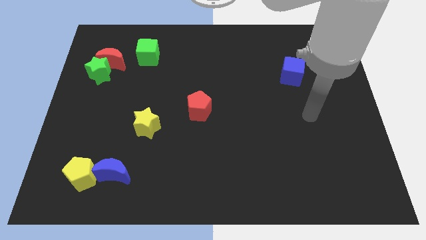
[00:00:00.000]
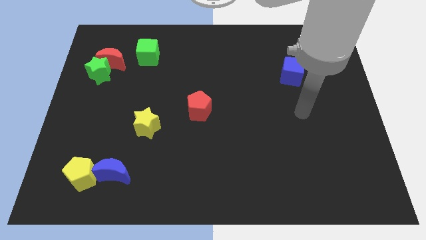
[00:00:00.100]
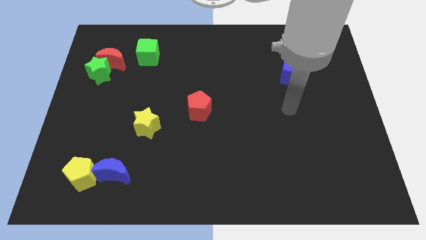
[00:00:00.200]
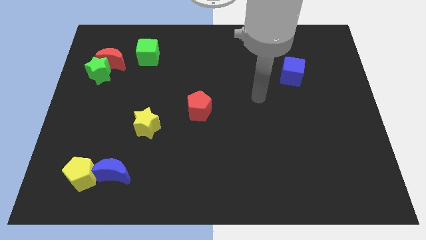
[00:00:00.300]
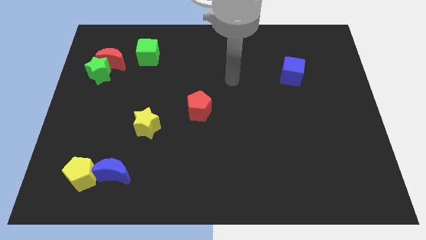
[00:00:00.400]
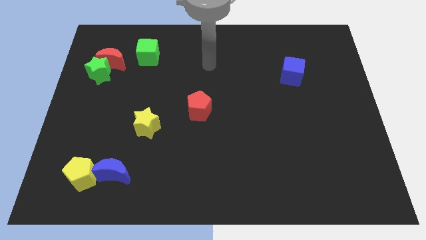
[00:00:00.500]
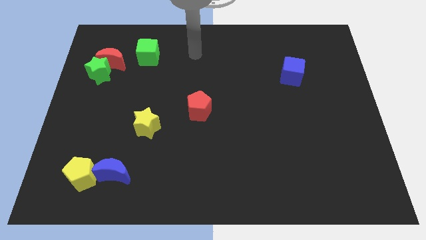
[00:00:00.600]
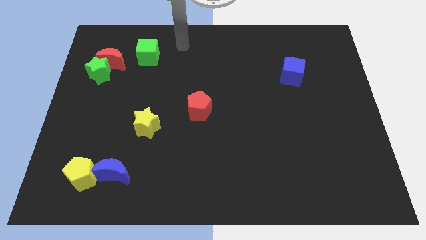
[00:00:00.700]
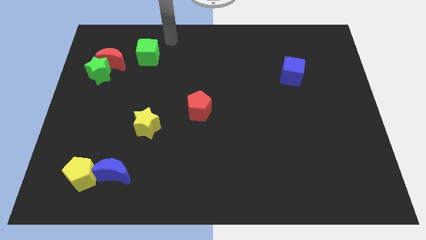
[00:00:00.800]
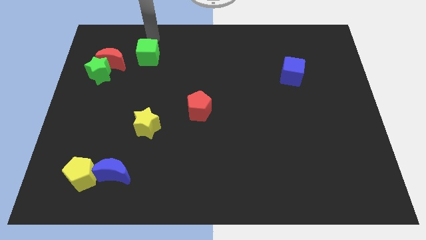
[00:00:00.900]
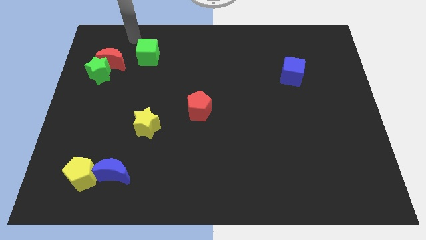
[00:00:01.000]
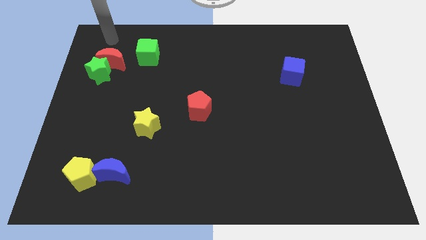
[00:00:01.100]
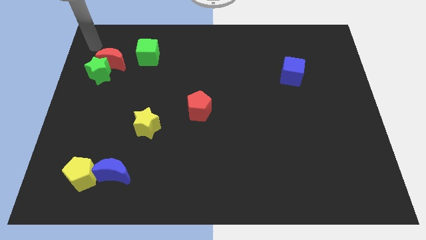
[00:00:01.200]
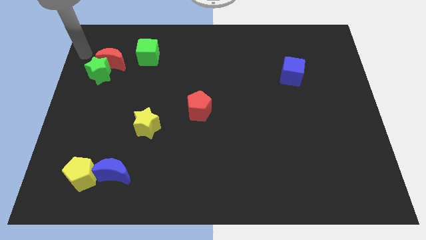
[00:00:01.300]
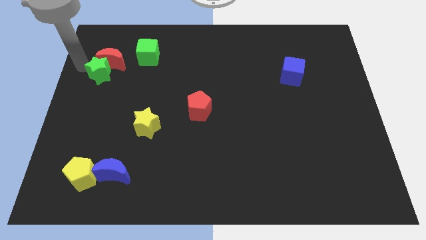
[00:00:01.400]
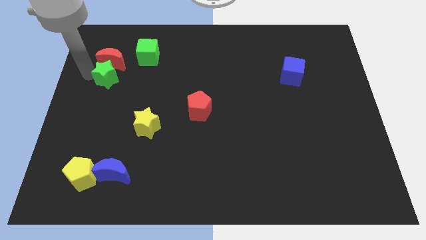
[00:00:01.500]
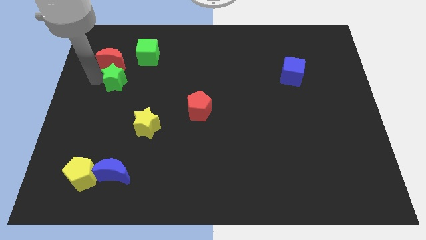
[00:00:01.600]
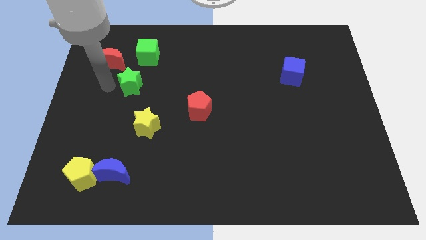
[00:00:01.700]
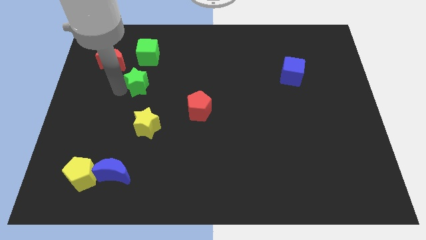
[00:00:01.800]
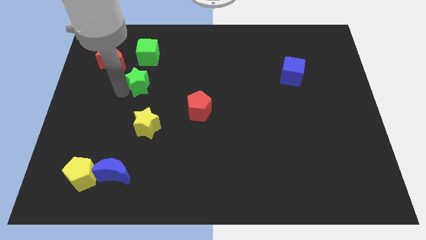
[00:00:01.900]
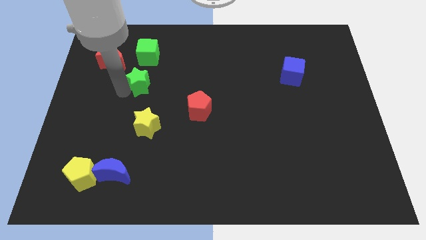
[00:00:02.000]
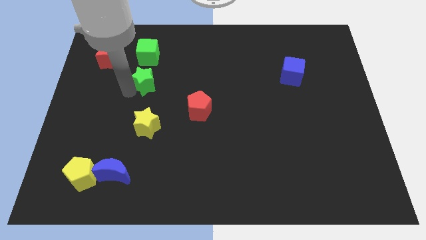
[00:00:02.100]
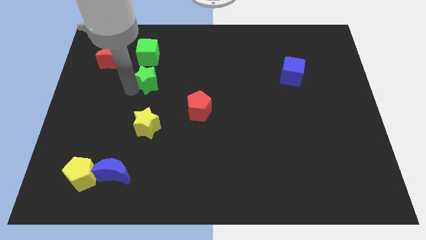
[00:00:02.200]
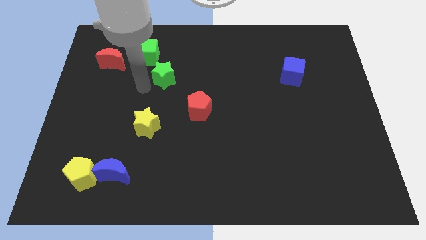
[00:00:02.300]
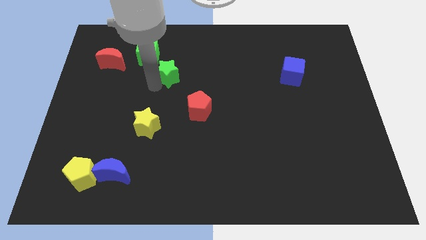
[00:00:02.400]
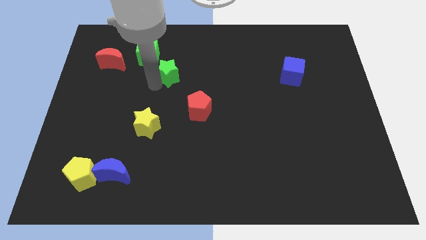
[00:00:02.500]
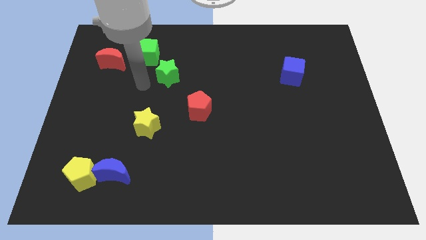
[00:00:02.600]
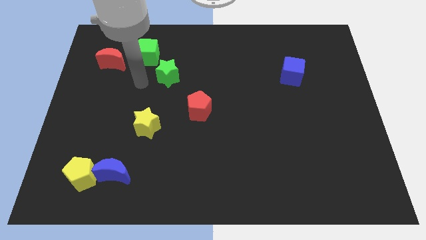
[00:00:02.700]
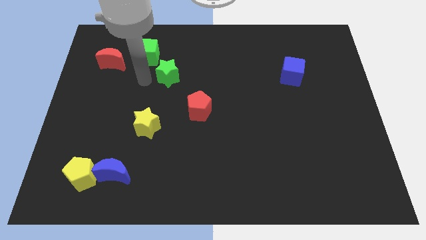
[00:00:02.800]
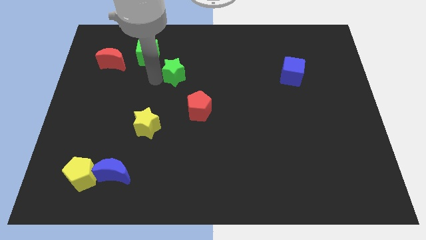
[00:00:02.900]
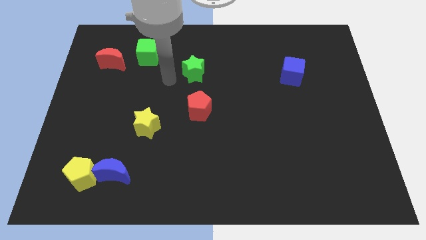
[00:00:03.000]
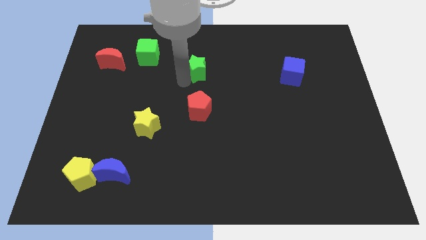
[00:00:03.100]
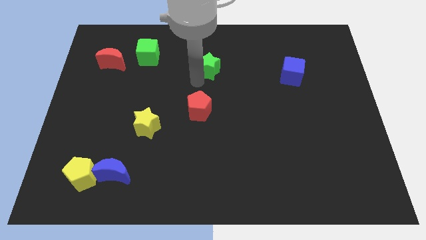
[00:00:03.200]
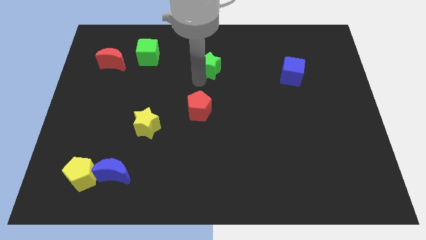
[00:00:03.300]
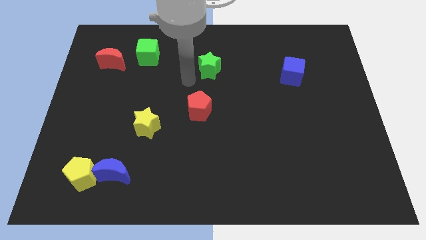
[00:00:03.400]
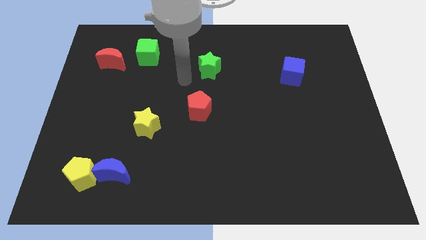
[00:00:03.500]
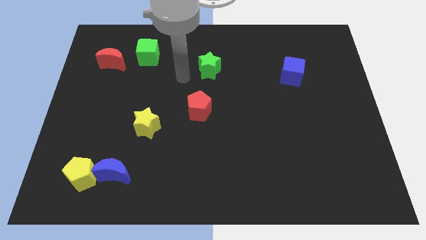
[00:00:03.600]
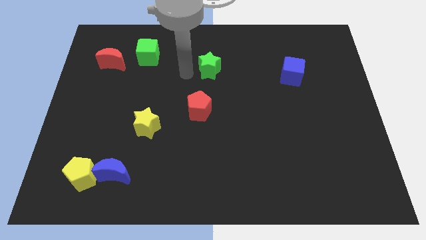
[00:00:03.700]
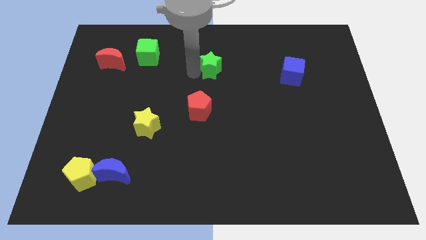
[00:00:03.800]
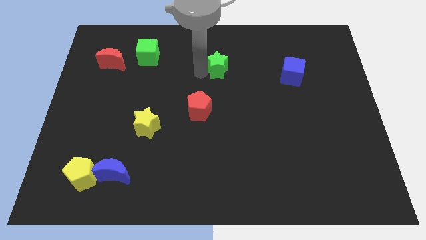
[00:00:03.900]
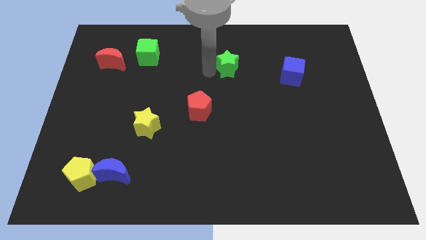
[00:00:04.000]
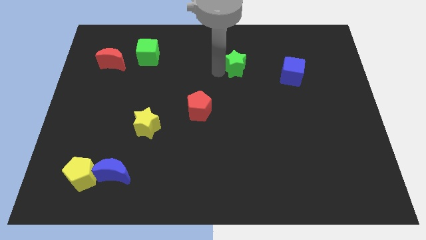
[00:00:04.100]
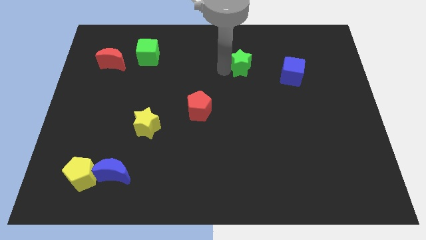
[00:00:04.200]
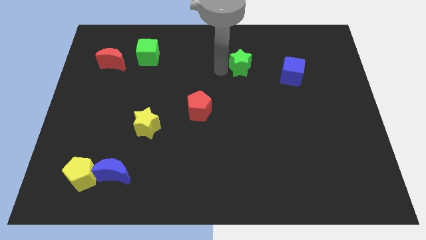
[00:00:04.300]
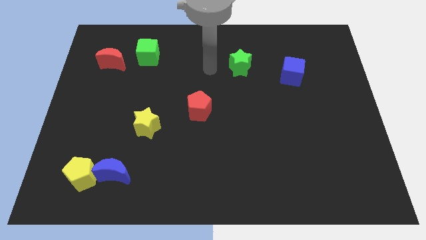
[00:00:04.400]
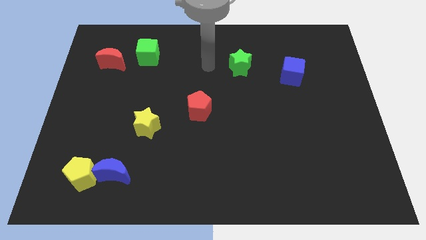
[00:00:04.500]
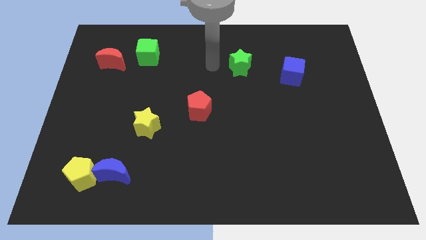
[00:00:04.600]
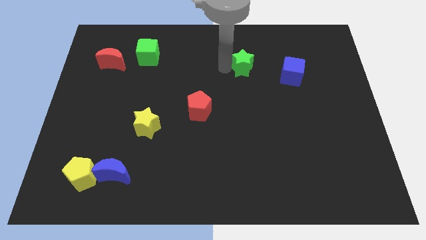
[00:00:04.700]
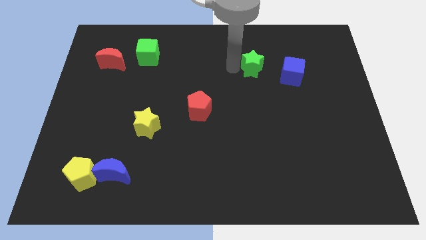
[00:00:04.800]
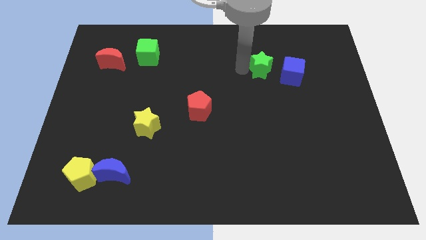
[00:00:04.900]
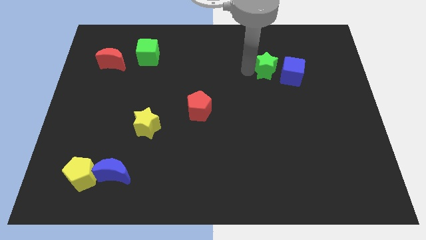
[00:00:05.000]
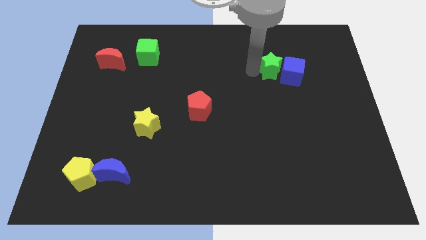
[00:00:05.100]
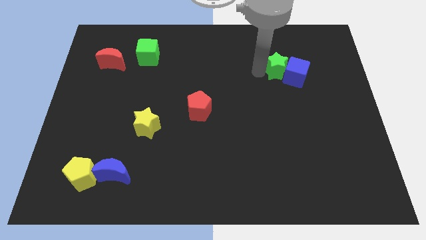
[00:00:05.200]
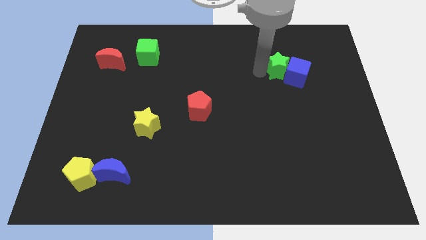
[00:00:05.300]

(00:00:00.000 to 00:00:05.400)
slide the green star towards the blue cube

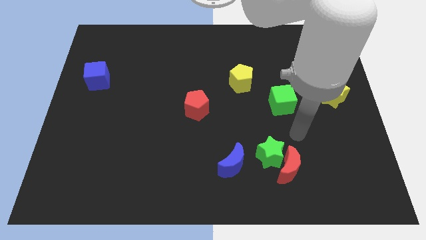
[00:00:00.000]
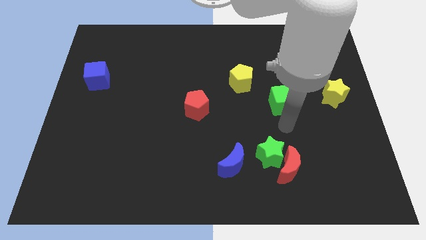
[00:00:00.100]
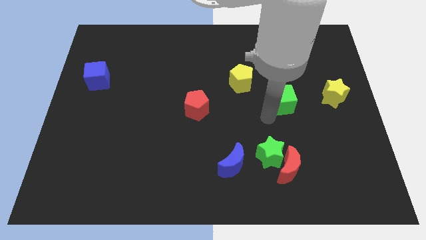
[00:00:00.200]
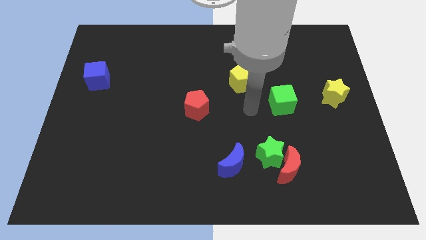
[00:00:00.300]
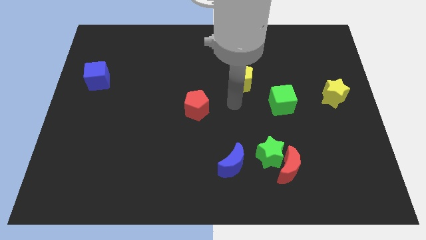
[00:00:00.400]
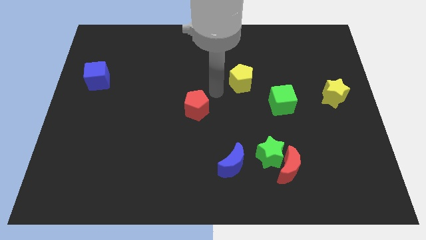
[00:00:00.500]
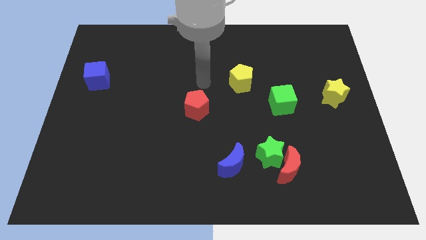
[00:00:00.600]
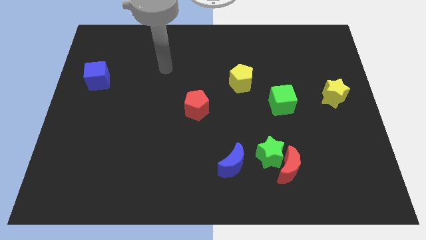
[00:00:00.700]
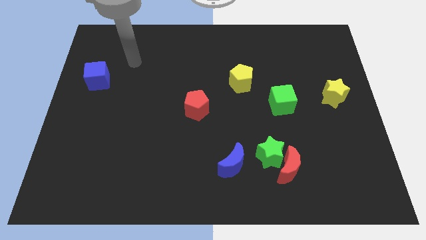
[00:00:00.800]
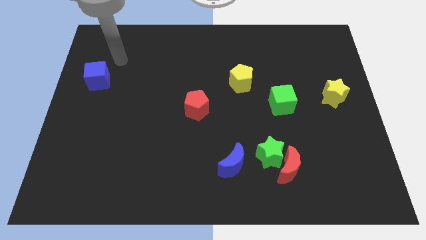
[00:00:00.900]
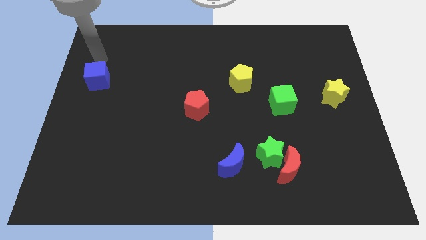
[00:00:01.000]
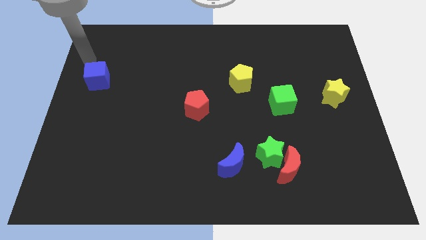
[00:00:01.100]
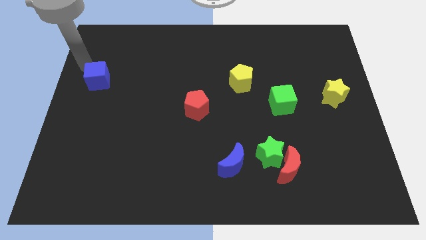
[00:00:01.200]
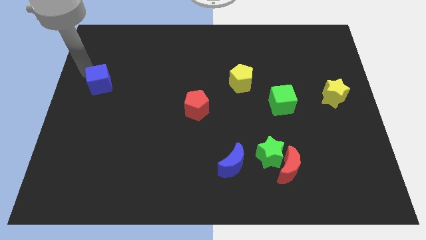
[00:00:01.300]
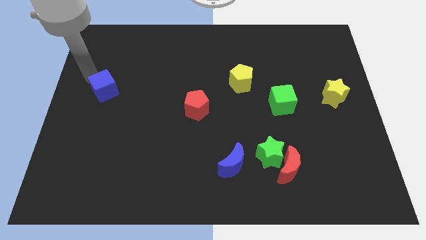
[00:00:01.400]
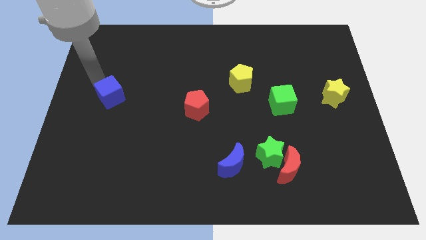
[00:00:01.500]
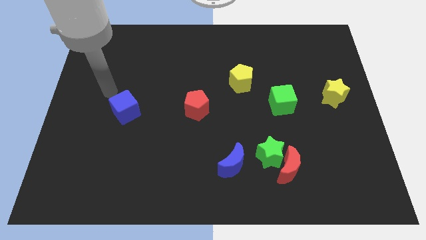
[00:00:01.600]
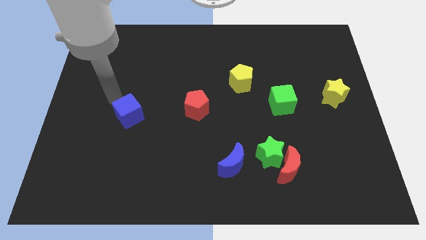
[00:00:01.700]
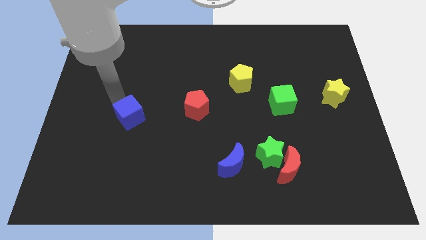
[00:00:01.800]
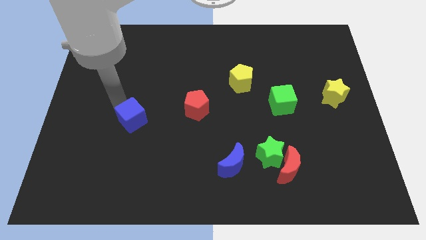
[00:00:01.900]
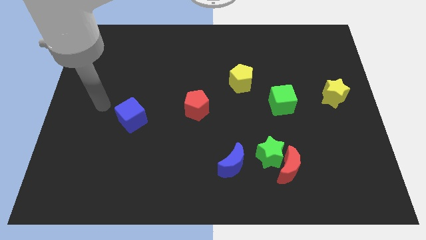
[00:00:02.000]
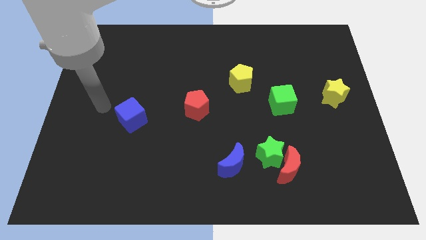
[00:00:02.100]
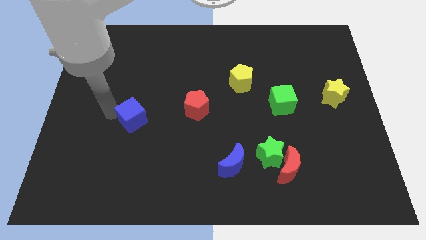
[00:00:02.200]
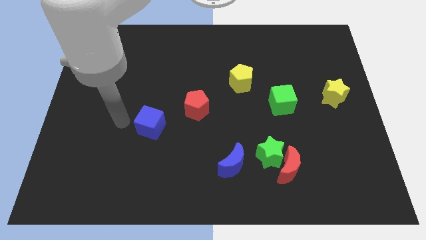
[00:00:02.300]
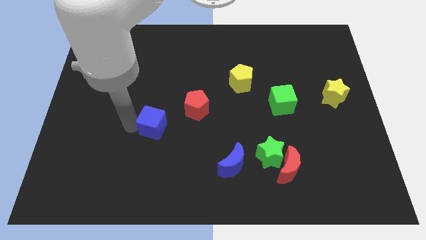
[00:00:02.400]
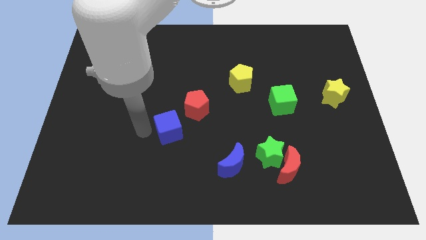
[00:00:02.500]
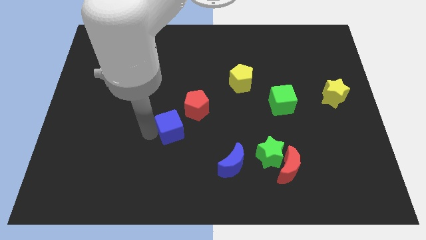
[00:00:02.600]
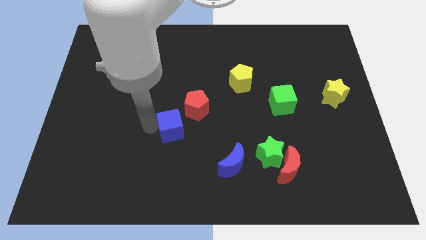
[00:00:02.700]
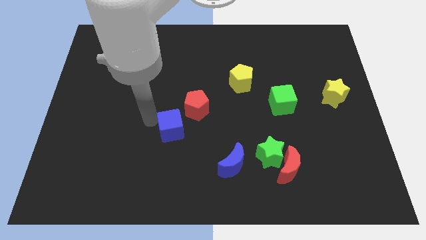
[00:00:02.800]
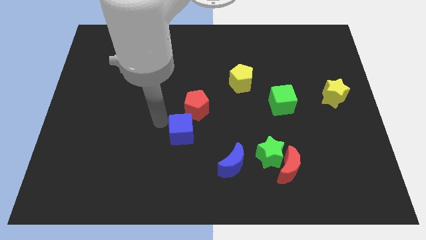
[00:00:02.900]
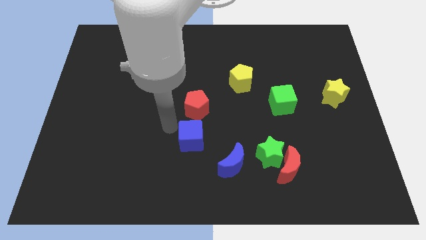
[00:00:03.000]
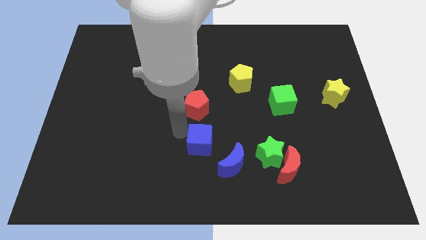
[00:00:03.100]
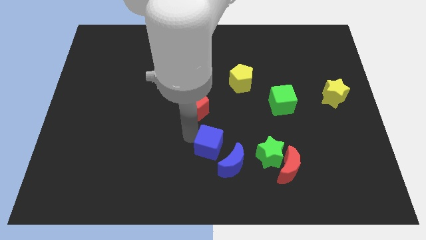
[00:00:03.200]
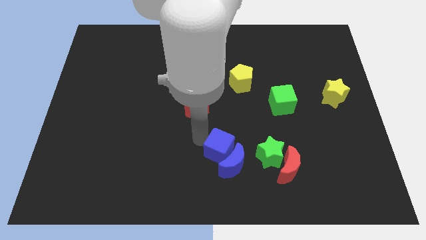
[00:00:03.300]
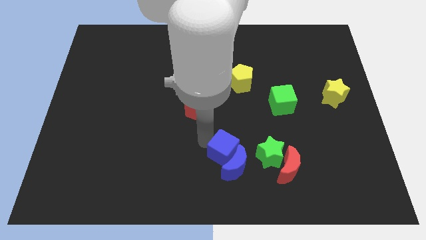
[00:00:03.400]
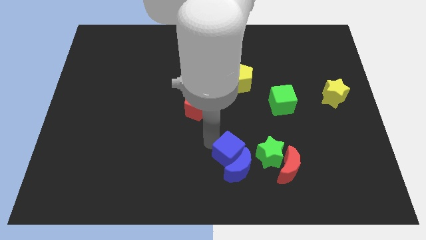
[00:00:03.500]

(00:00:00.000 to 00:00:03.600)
slide the blue cube close to the blue moon
